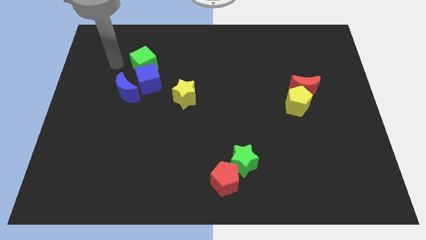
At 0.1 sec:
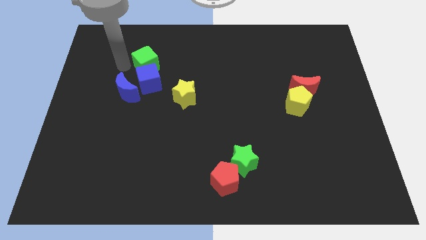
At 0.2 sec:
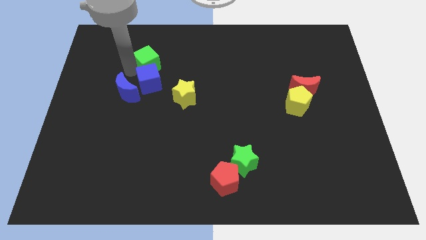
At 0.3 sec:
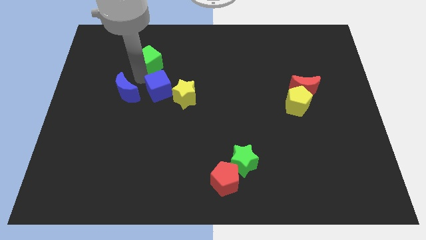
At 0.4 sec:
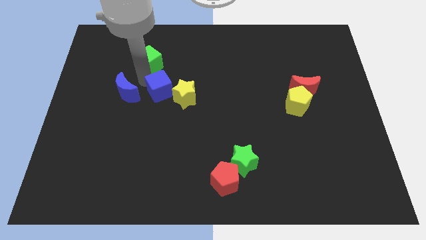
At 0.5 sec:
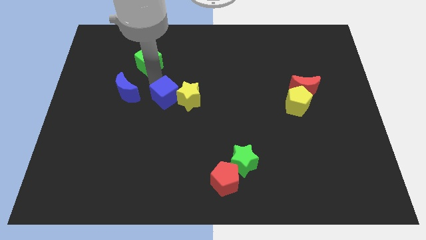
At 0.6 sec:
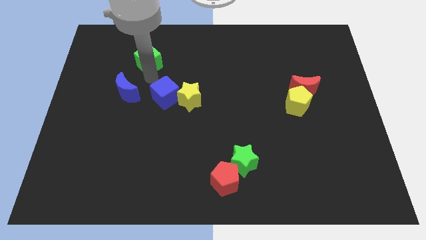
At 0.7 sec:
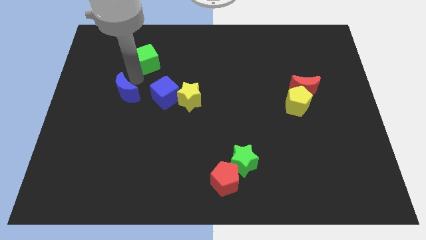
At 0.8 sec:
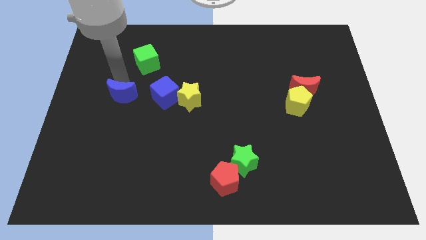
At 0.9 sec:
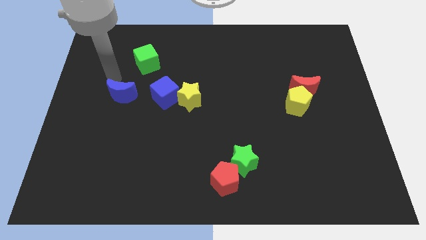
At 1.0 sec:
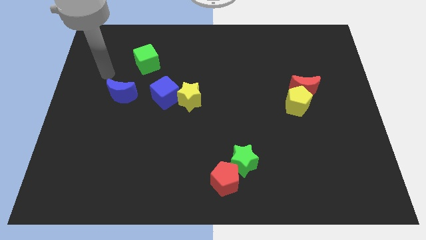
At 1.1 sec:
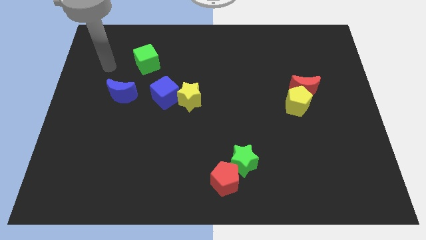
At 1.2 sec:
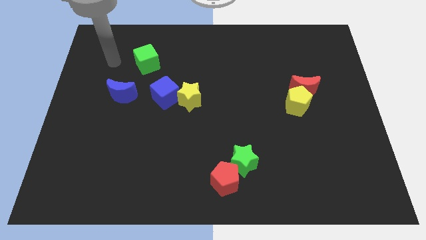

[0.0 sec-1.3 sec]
separate the green and blue cubes

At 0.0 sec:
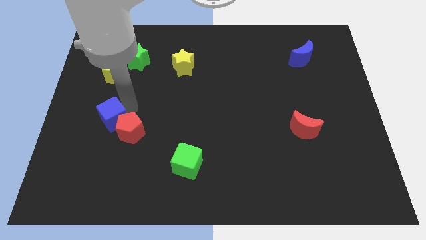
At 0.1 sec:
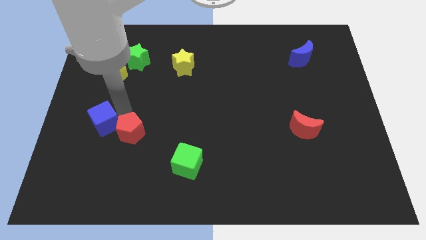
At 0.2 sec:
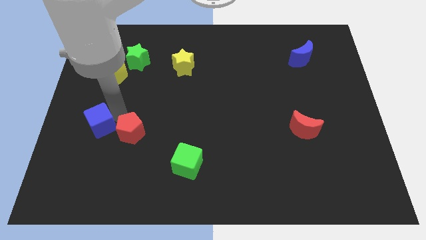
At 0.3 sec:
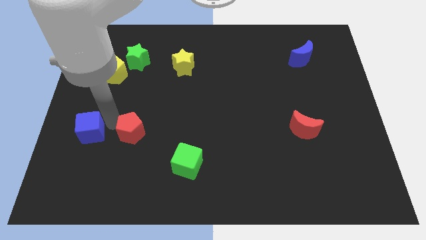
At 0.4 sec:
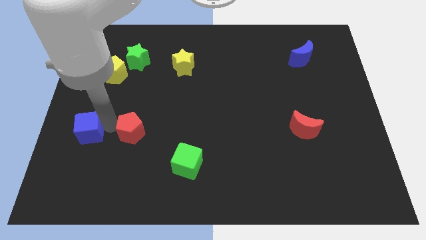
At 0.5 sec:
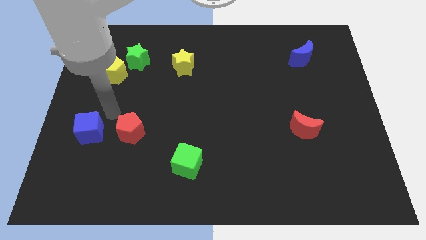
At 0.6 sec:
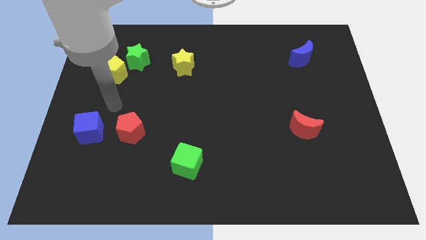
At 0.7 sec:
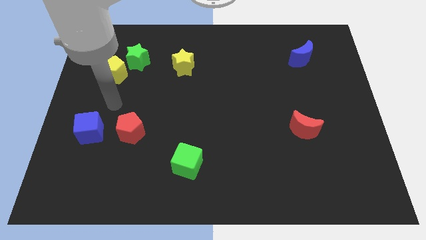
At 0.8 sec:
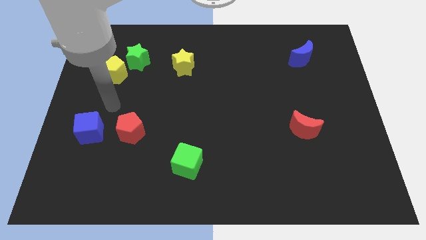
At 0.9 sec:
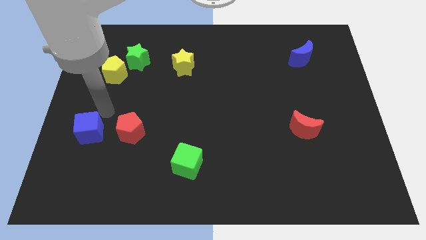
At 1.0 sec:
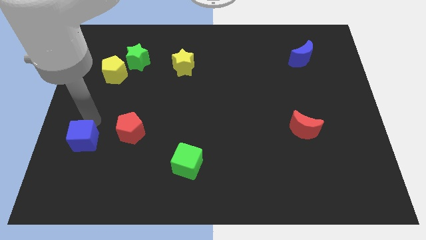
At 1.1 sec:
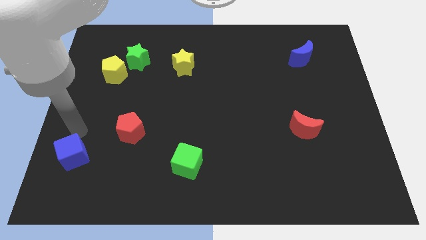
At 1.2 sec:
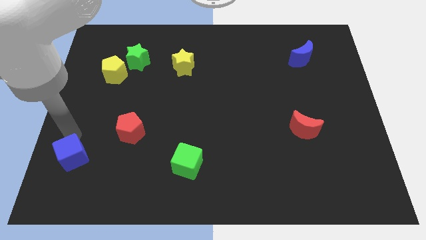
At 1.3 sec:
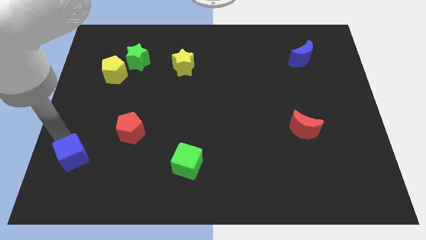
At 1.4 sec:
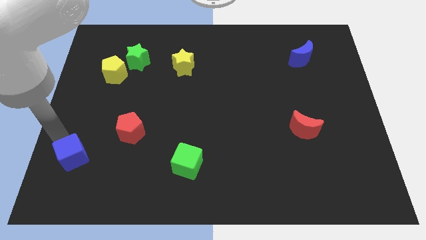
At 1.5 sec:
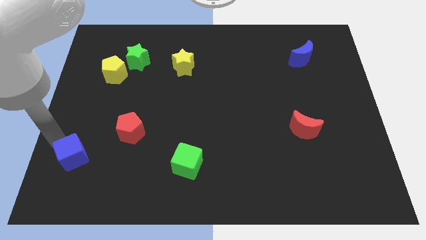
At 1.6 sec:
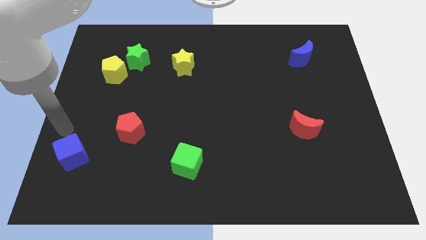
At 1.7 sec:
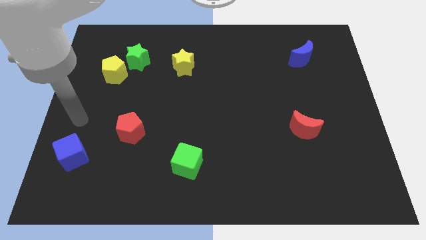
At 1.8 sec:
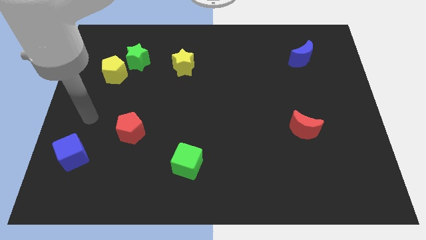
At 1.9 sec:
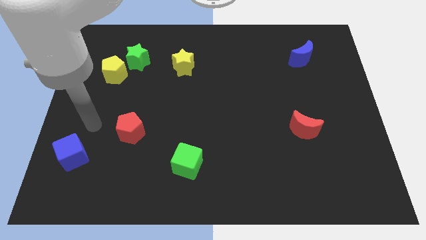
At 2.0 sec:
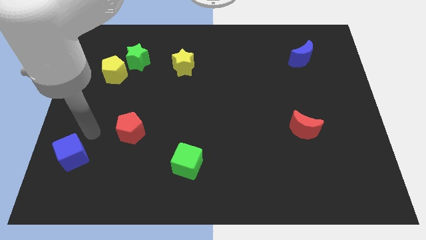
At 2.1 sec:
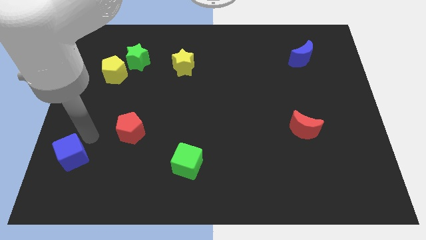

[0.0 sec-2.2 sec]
move the blue cube away from the red pentagon

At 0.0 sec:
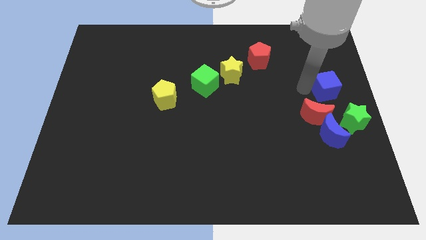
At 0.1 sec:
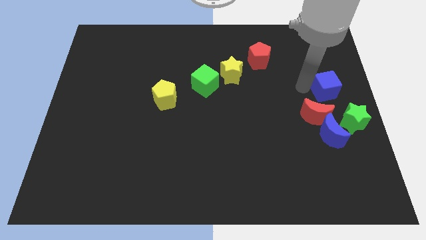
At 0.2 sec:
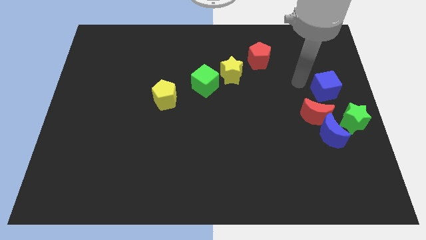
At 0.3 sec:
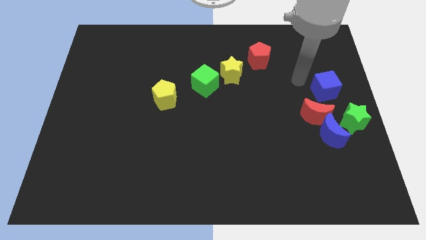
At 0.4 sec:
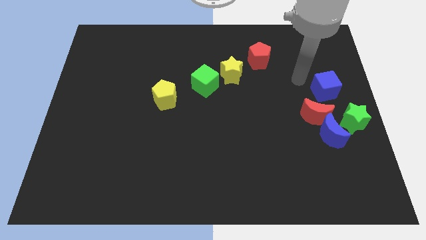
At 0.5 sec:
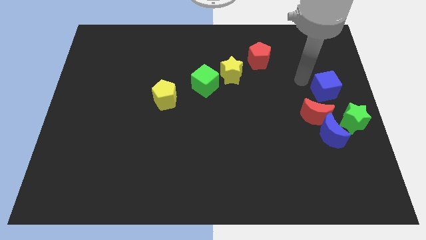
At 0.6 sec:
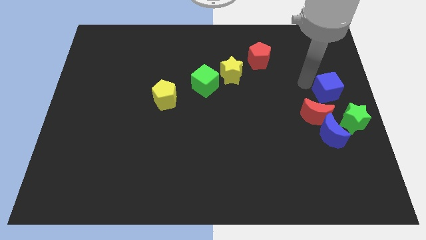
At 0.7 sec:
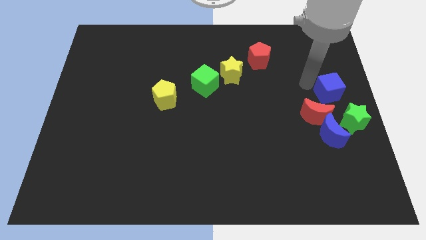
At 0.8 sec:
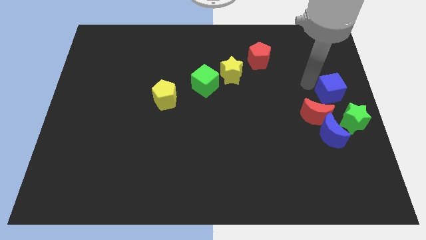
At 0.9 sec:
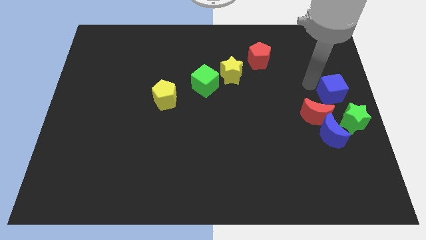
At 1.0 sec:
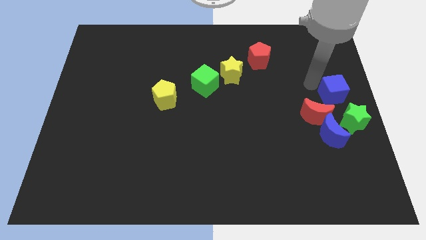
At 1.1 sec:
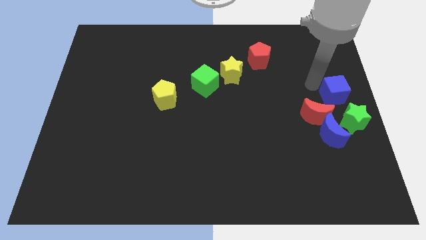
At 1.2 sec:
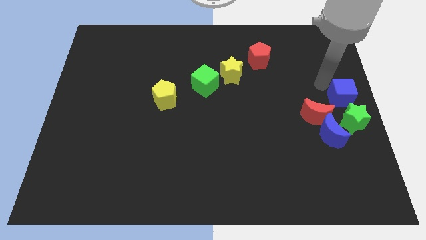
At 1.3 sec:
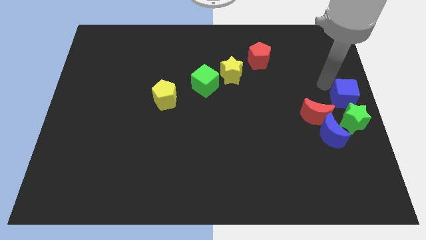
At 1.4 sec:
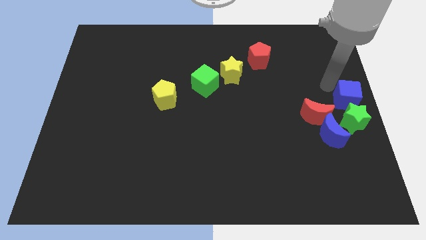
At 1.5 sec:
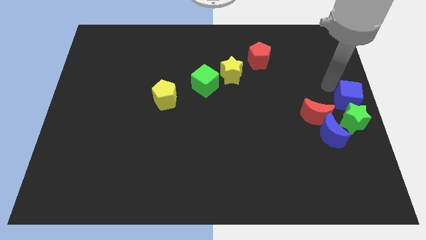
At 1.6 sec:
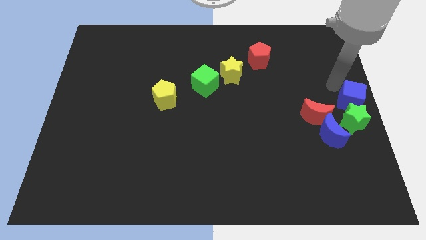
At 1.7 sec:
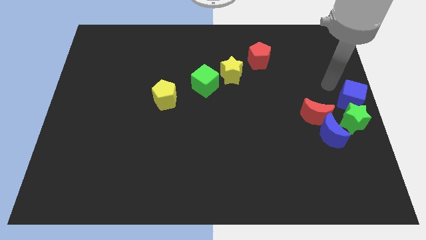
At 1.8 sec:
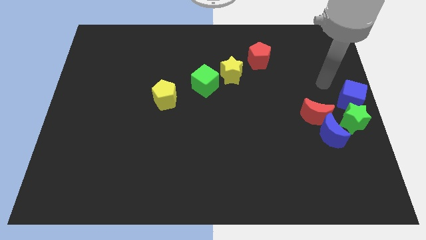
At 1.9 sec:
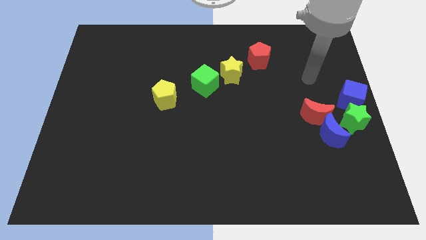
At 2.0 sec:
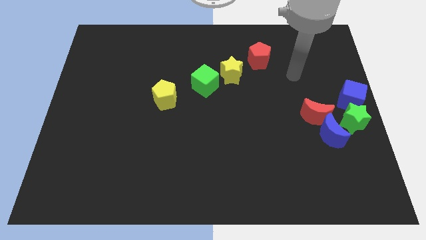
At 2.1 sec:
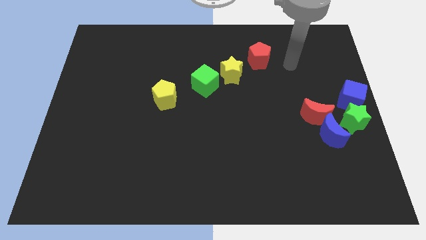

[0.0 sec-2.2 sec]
put the blue cube above the green star

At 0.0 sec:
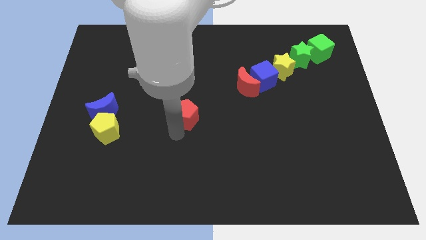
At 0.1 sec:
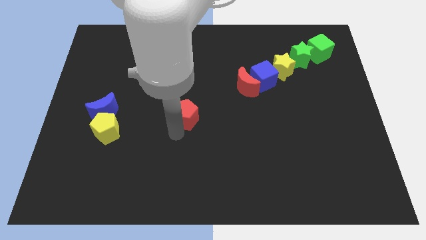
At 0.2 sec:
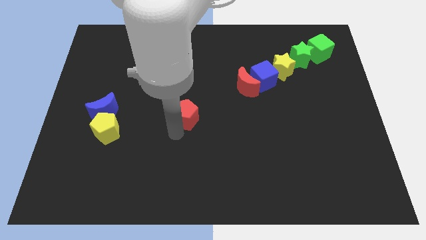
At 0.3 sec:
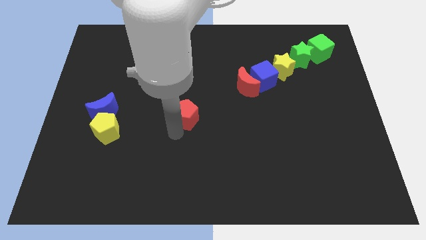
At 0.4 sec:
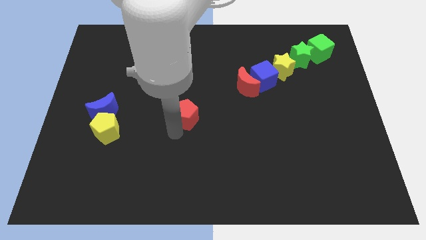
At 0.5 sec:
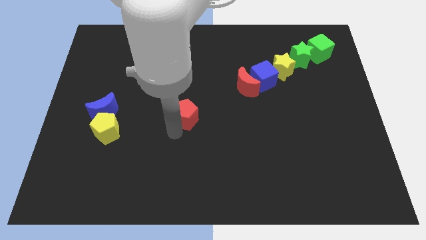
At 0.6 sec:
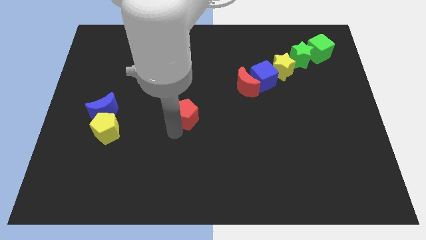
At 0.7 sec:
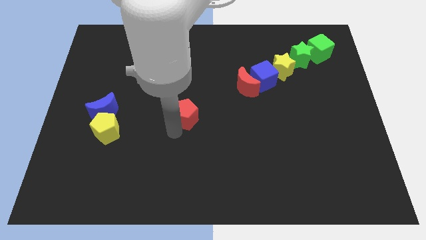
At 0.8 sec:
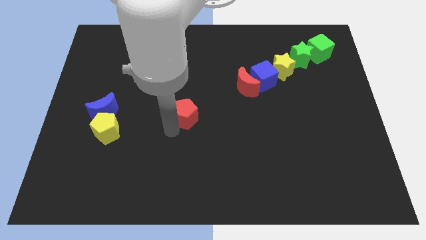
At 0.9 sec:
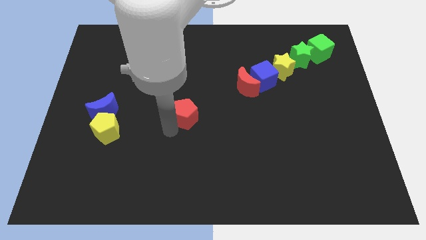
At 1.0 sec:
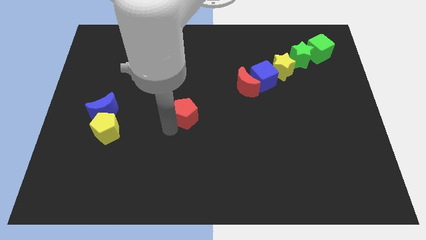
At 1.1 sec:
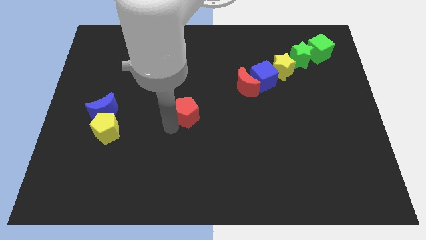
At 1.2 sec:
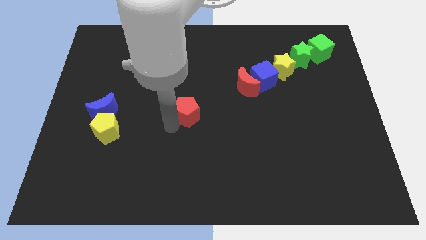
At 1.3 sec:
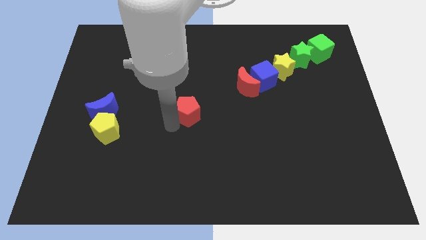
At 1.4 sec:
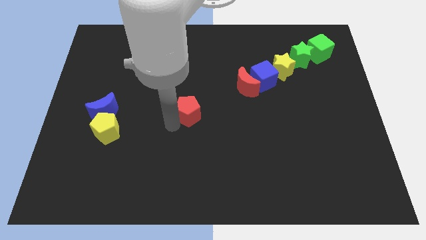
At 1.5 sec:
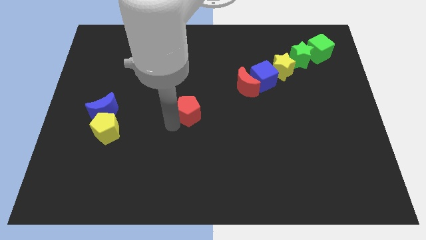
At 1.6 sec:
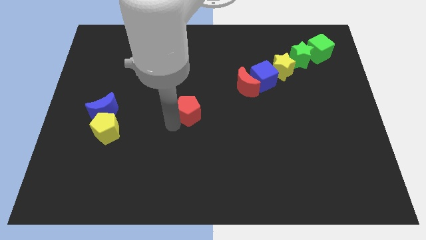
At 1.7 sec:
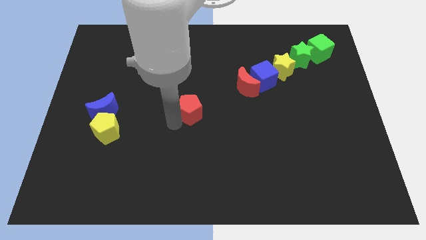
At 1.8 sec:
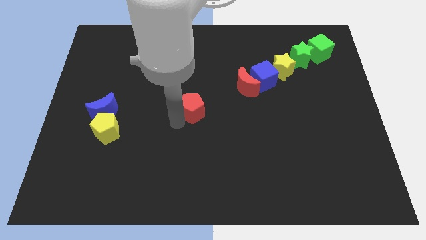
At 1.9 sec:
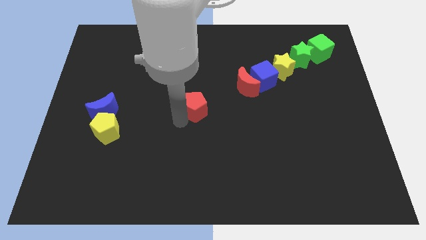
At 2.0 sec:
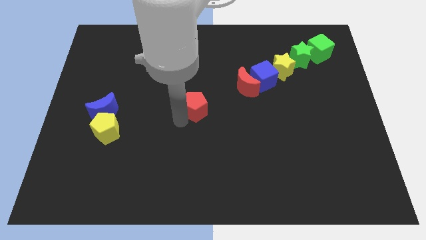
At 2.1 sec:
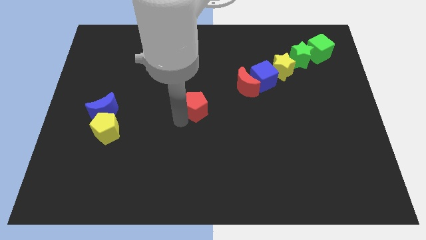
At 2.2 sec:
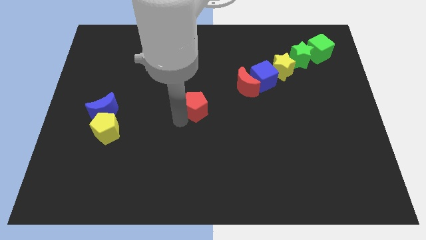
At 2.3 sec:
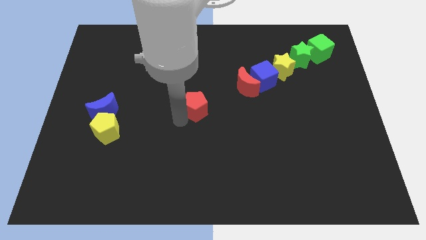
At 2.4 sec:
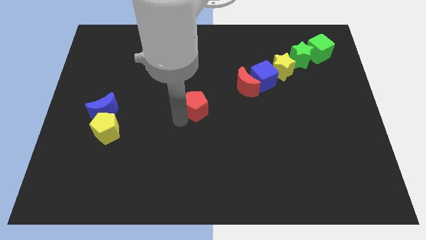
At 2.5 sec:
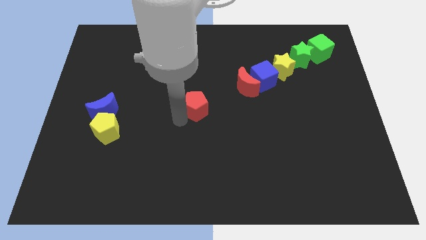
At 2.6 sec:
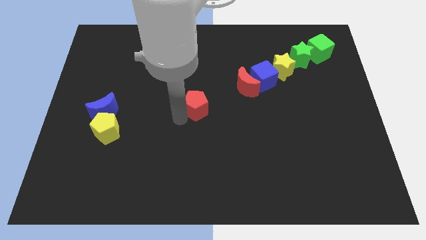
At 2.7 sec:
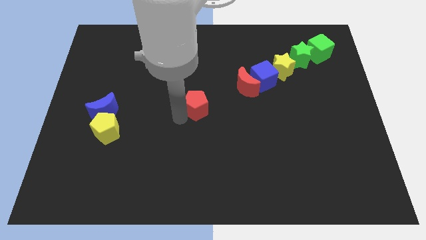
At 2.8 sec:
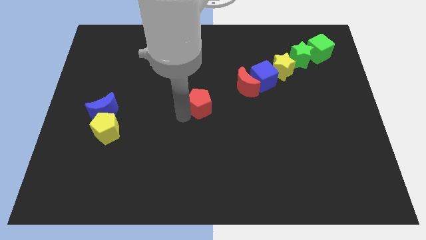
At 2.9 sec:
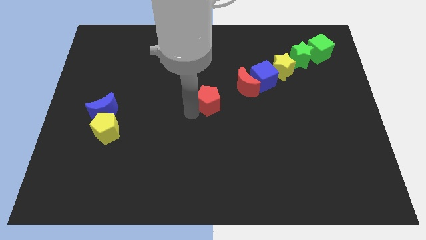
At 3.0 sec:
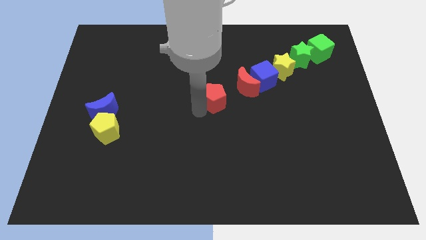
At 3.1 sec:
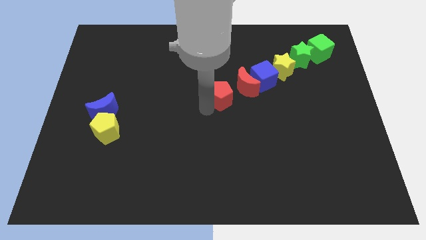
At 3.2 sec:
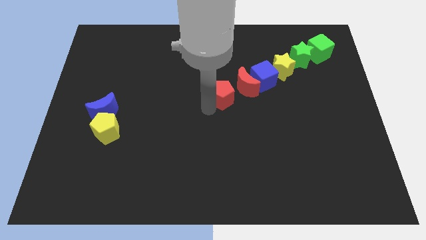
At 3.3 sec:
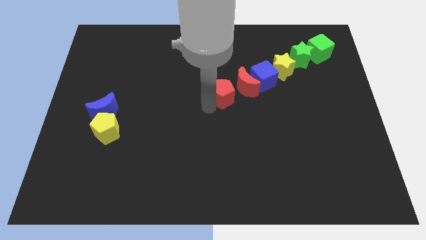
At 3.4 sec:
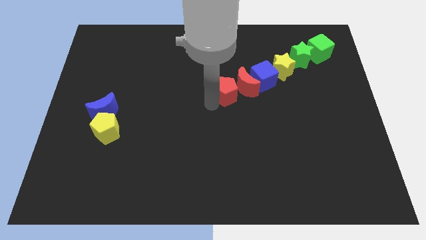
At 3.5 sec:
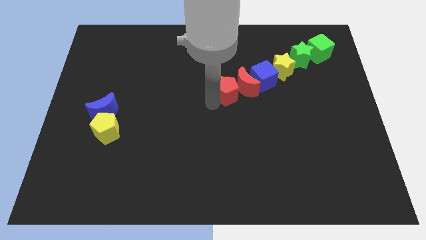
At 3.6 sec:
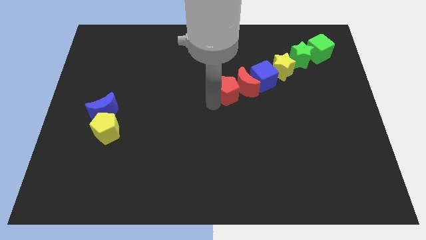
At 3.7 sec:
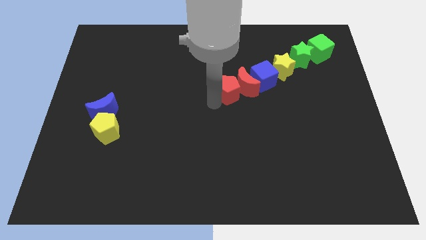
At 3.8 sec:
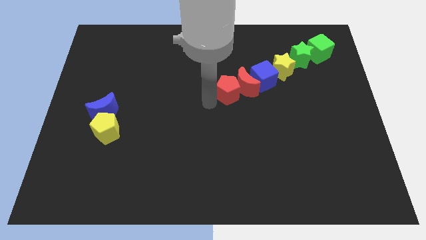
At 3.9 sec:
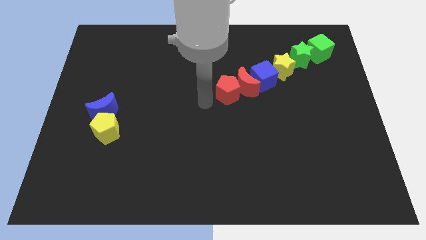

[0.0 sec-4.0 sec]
place the red pentagon diagonal to the yellow pentagon
